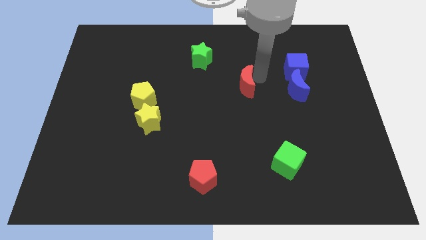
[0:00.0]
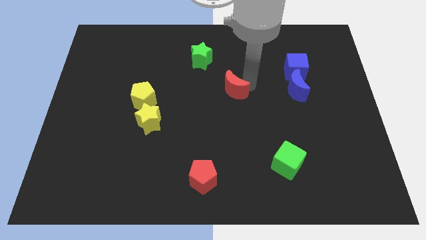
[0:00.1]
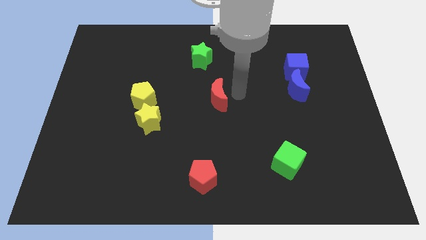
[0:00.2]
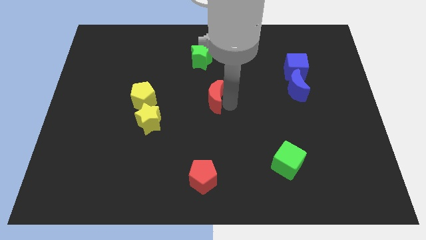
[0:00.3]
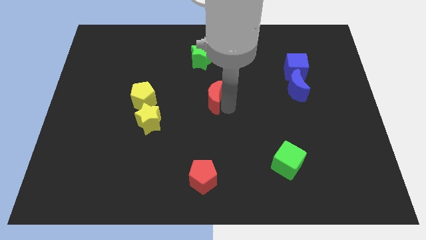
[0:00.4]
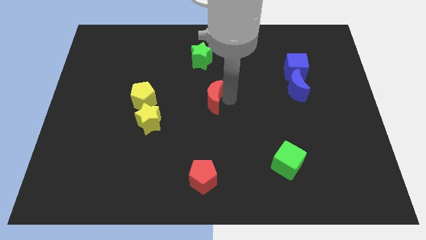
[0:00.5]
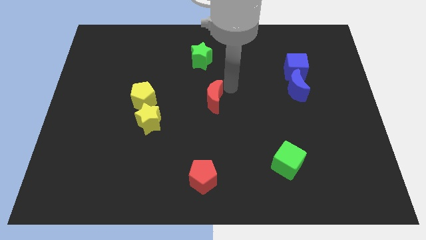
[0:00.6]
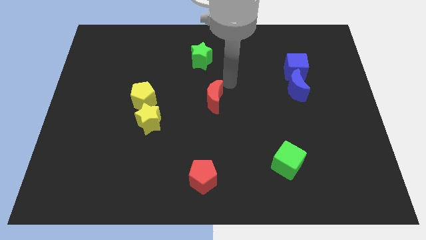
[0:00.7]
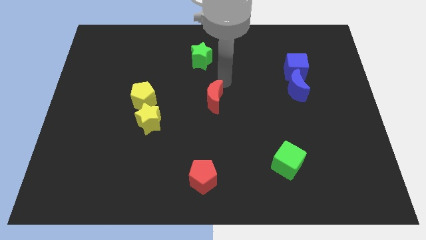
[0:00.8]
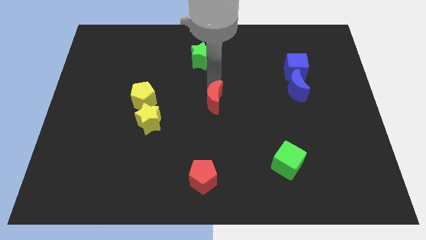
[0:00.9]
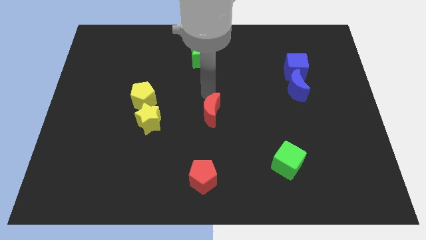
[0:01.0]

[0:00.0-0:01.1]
place red moon at the between to green star and red pentagon

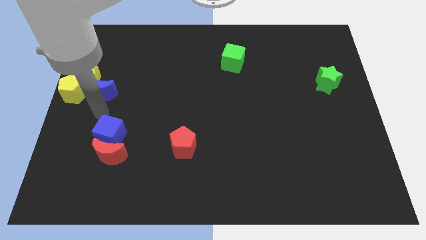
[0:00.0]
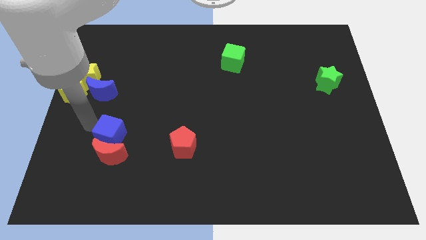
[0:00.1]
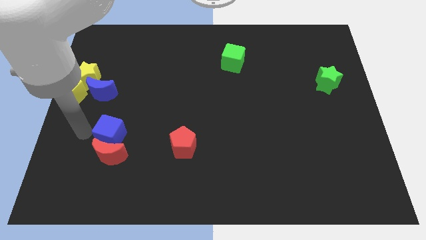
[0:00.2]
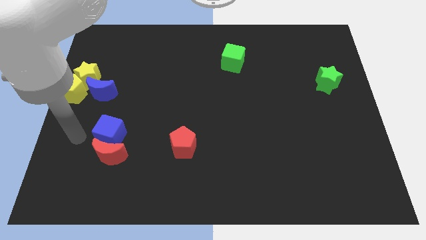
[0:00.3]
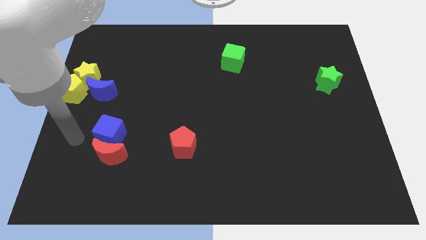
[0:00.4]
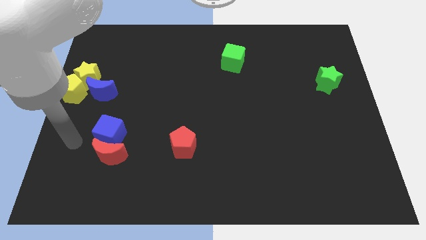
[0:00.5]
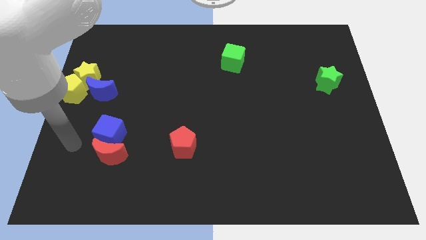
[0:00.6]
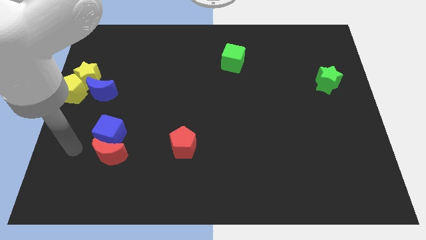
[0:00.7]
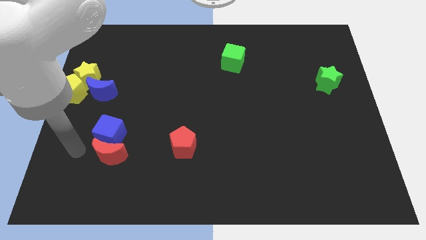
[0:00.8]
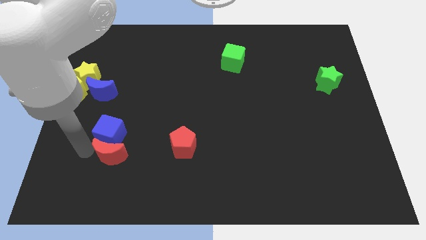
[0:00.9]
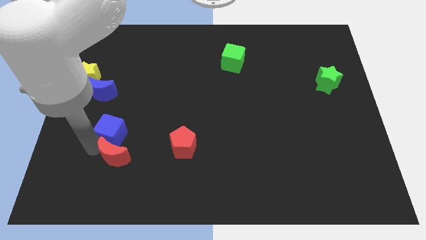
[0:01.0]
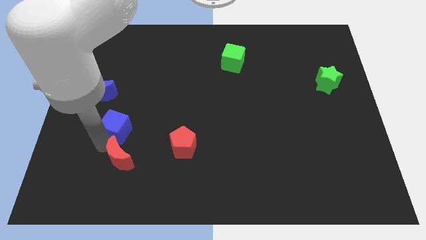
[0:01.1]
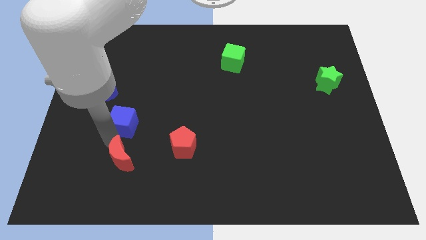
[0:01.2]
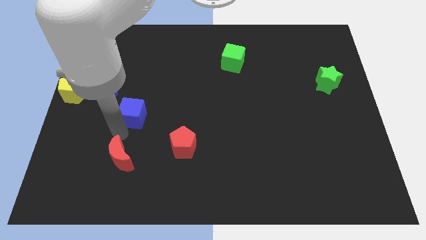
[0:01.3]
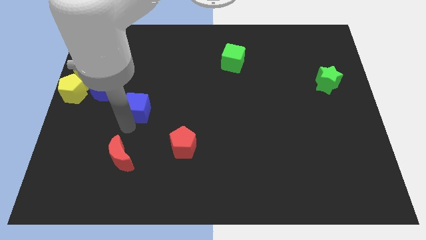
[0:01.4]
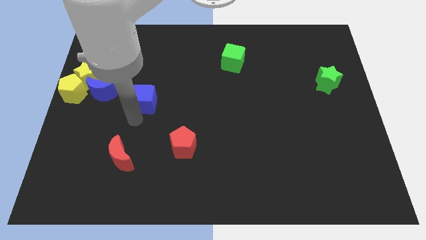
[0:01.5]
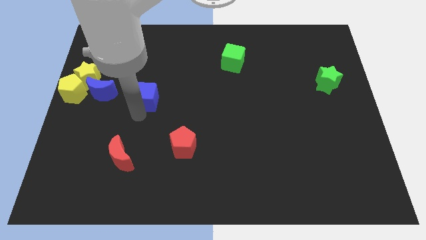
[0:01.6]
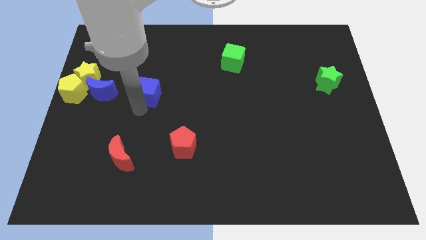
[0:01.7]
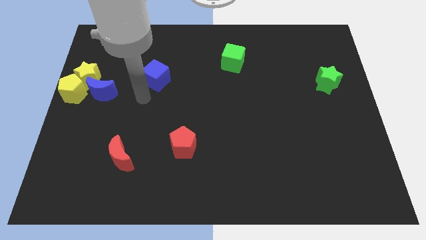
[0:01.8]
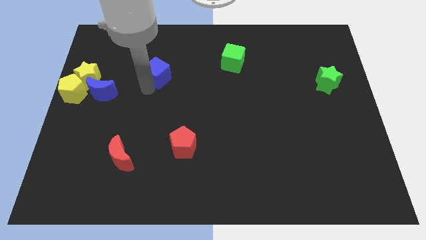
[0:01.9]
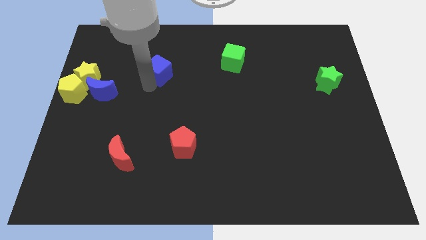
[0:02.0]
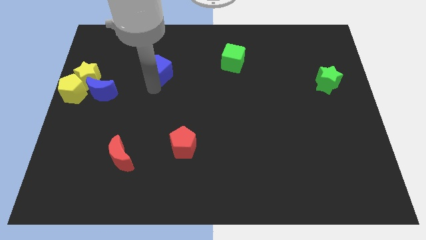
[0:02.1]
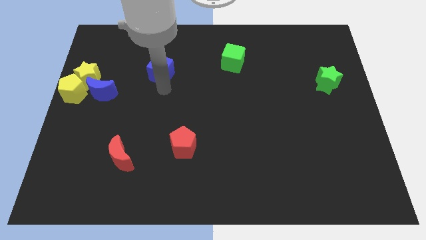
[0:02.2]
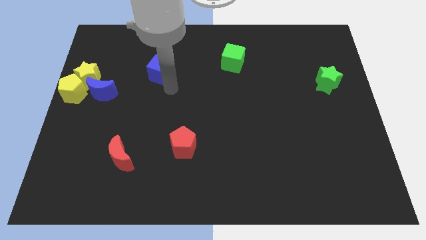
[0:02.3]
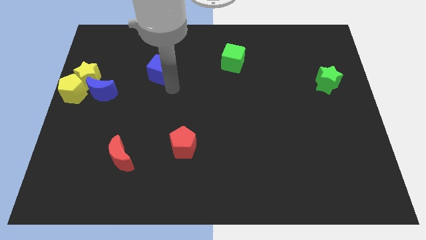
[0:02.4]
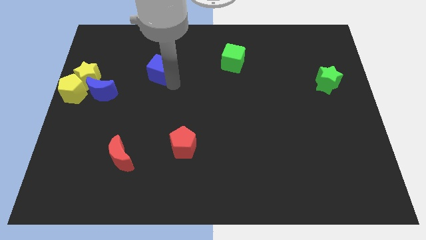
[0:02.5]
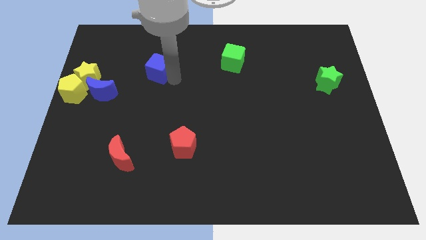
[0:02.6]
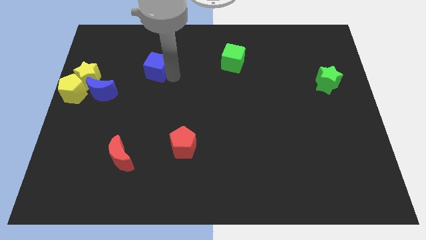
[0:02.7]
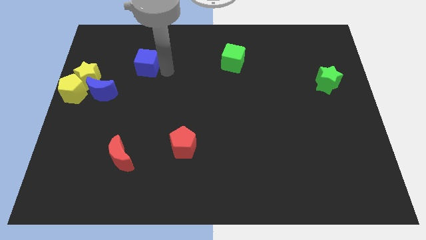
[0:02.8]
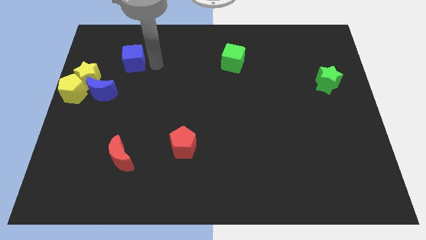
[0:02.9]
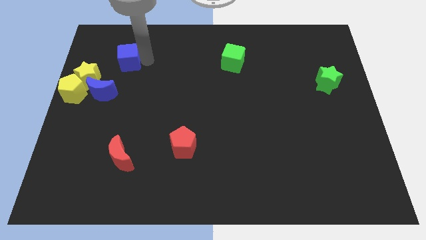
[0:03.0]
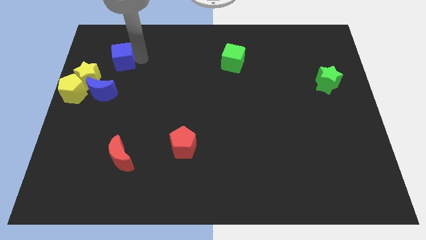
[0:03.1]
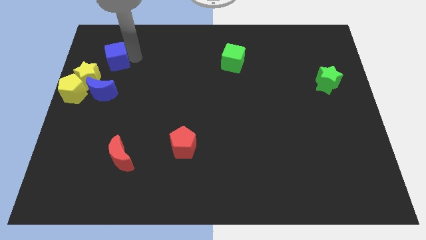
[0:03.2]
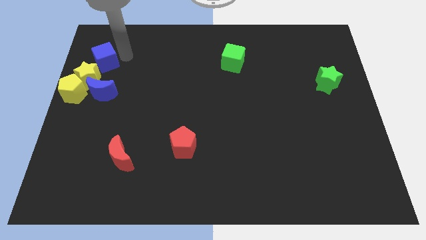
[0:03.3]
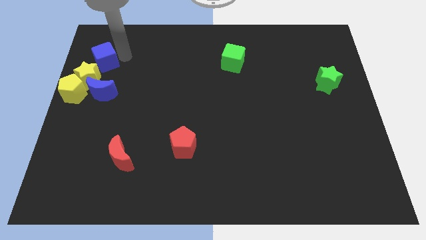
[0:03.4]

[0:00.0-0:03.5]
separate the blue cube and red moon

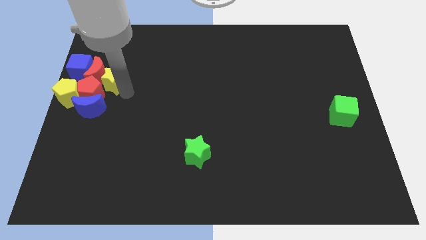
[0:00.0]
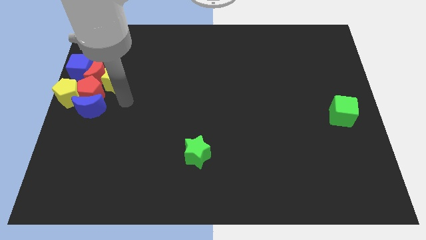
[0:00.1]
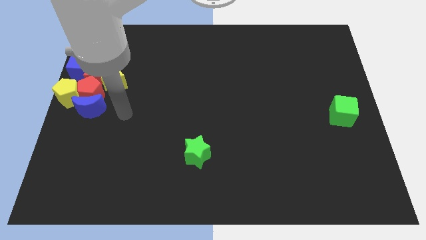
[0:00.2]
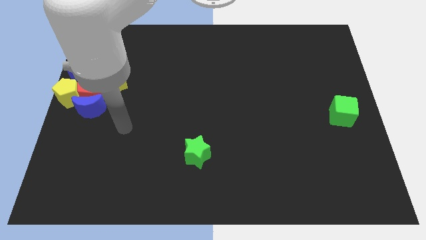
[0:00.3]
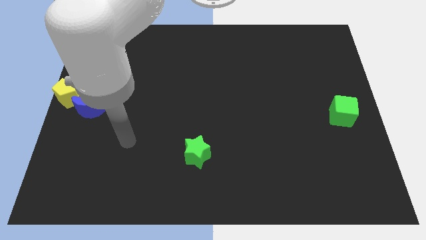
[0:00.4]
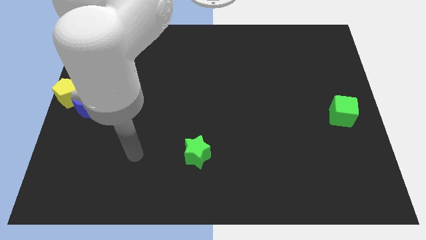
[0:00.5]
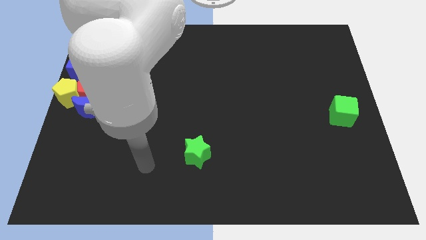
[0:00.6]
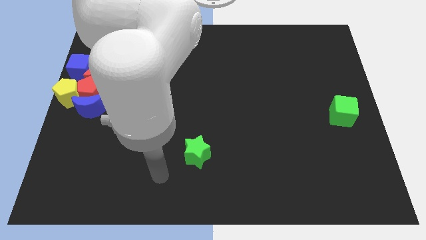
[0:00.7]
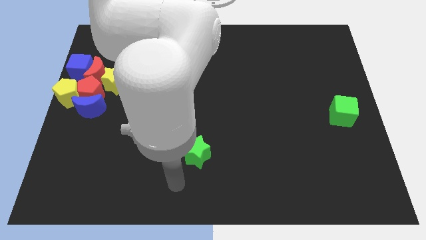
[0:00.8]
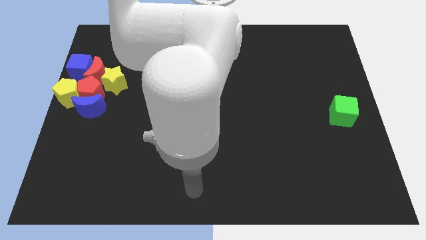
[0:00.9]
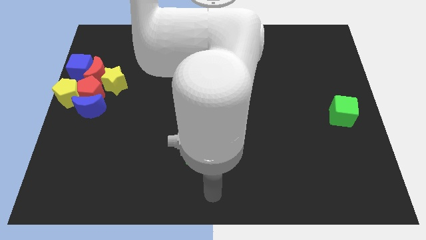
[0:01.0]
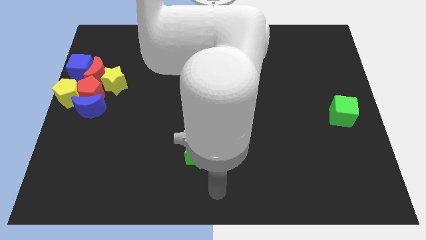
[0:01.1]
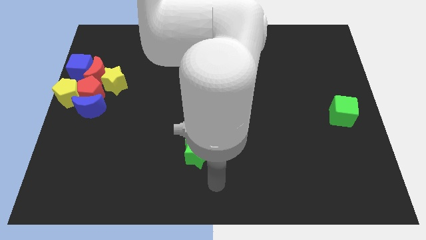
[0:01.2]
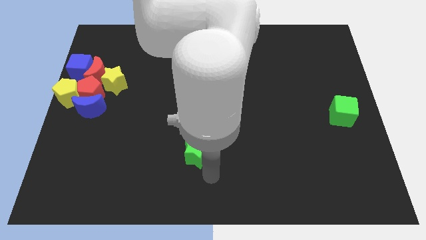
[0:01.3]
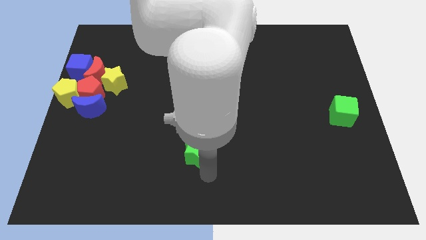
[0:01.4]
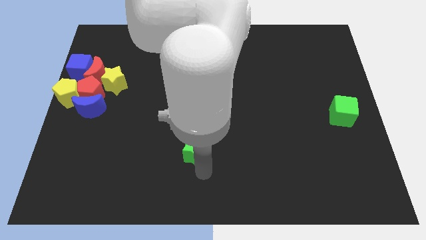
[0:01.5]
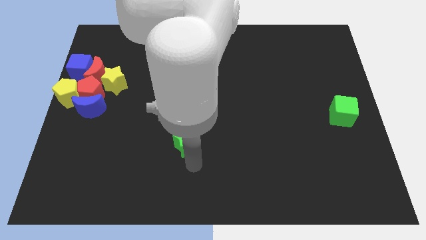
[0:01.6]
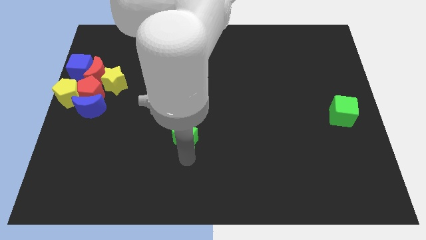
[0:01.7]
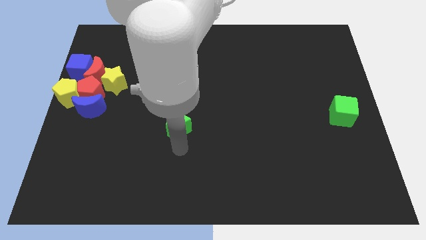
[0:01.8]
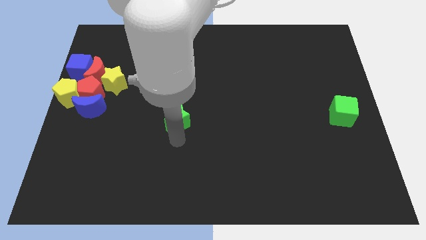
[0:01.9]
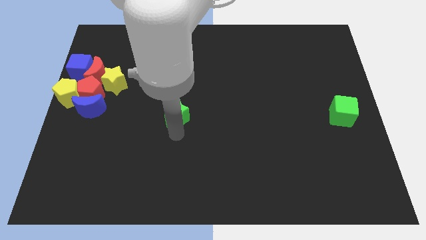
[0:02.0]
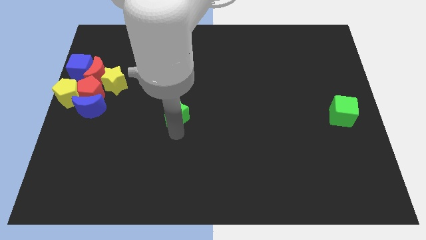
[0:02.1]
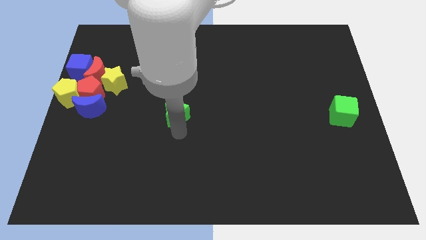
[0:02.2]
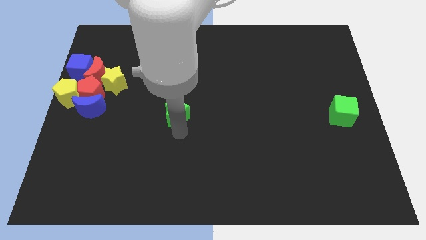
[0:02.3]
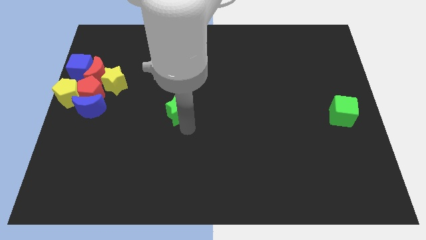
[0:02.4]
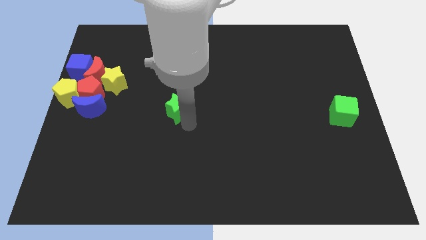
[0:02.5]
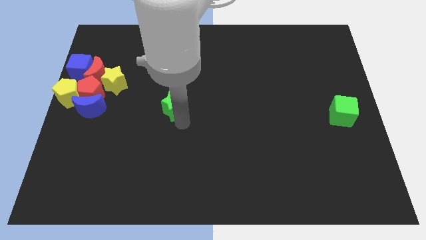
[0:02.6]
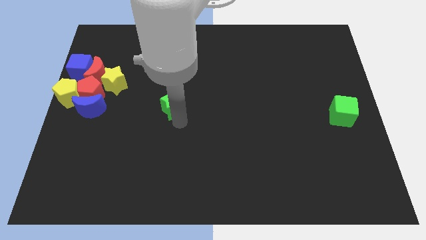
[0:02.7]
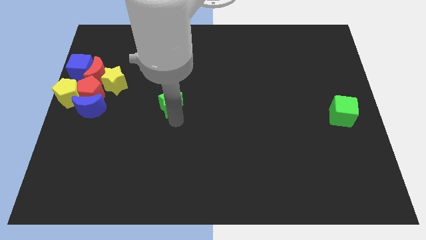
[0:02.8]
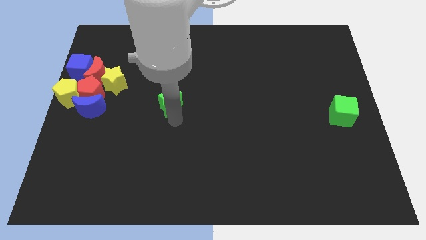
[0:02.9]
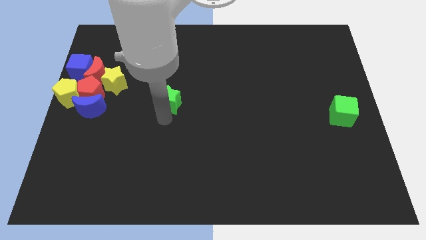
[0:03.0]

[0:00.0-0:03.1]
move the green star to the top

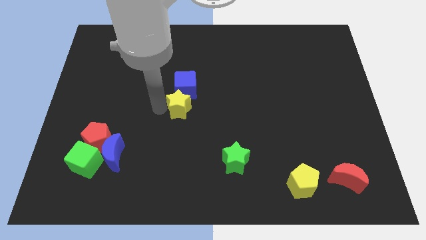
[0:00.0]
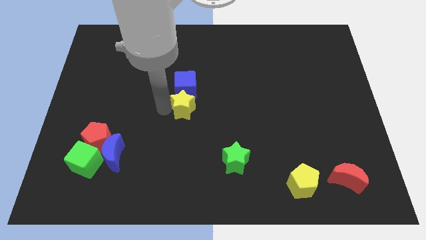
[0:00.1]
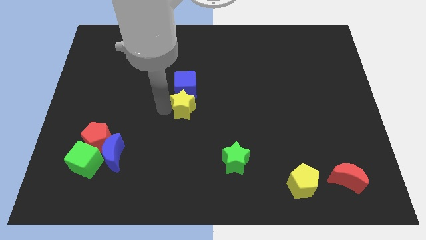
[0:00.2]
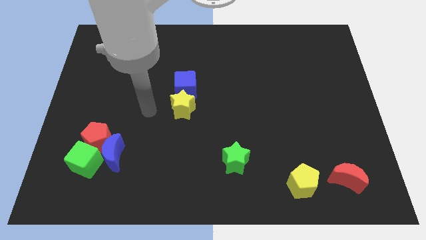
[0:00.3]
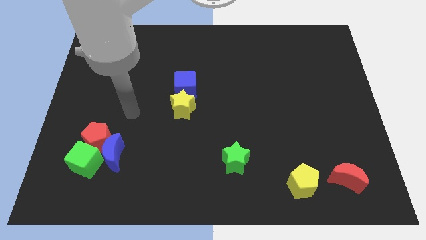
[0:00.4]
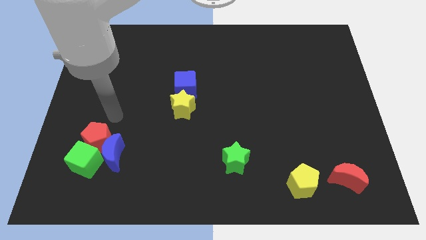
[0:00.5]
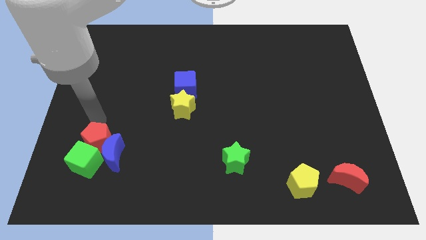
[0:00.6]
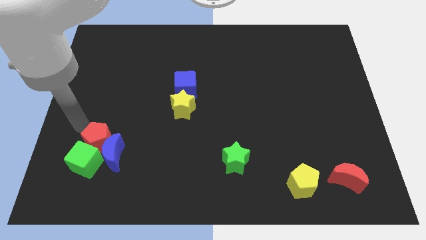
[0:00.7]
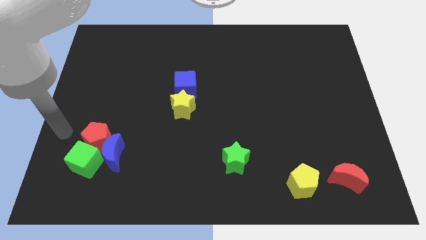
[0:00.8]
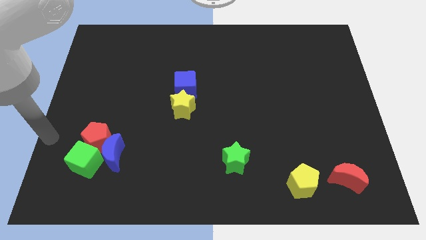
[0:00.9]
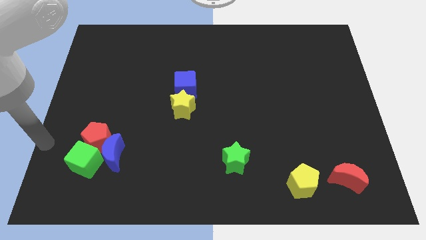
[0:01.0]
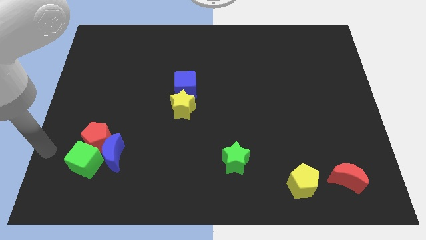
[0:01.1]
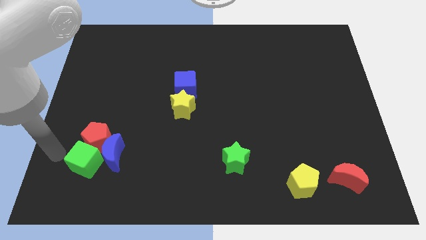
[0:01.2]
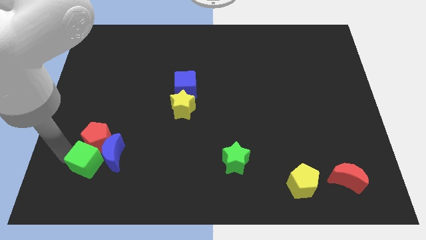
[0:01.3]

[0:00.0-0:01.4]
move the arm away from the yellow star
